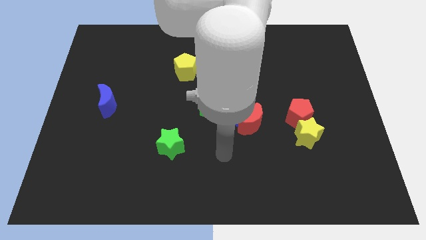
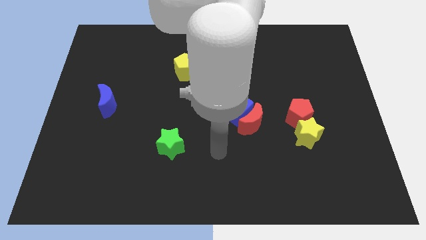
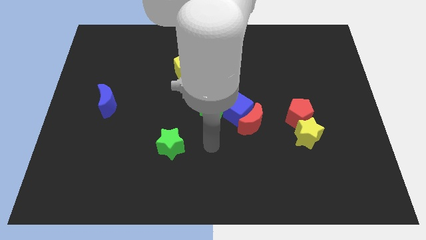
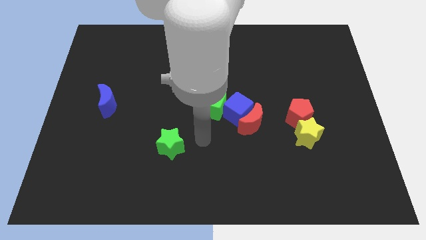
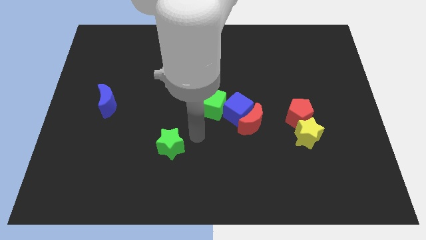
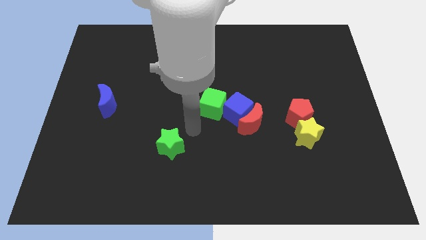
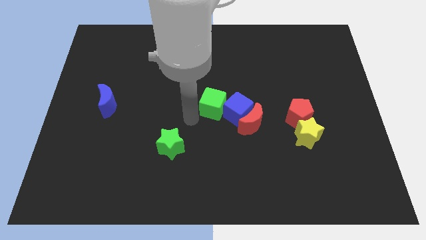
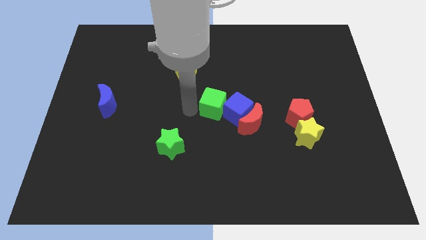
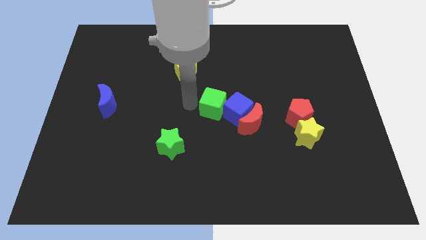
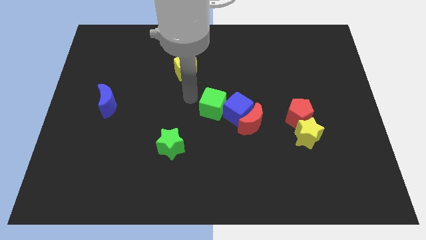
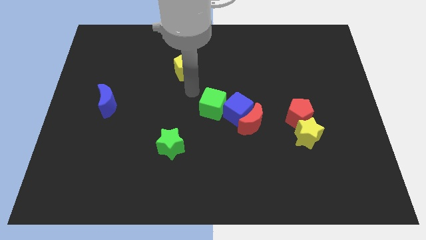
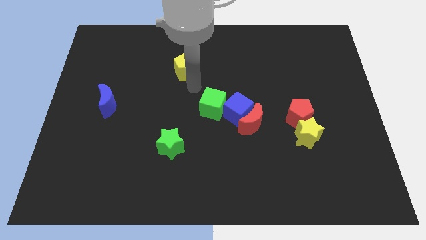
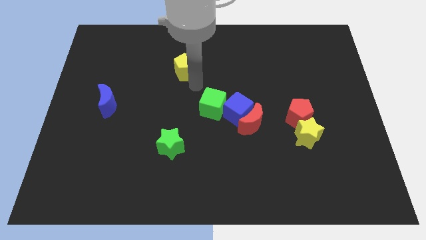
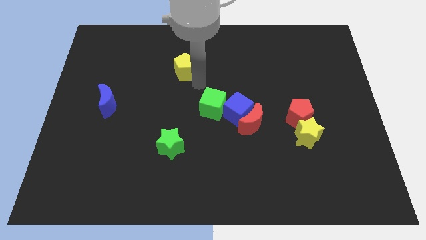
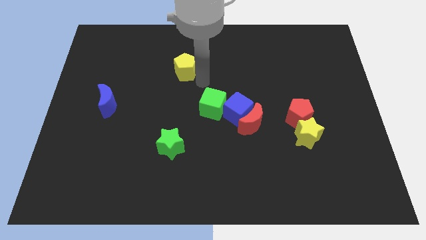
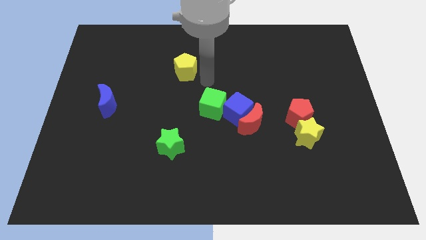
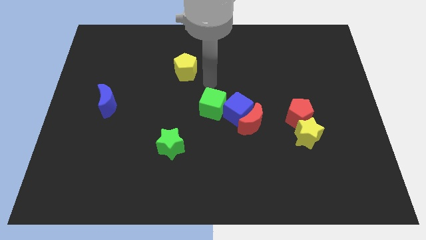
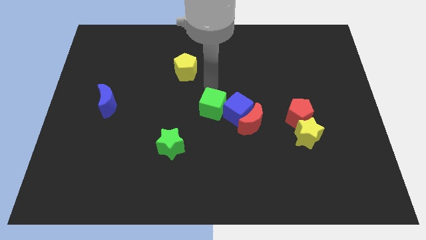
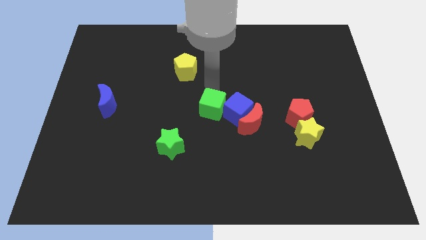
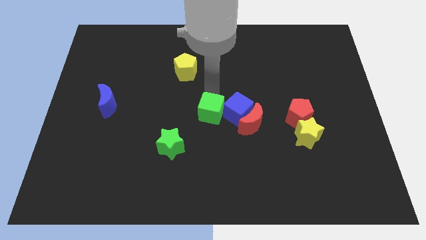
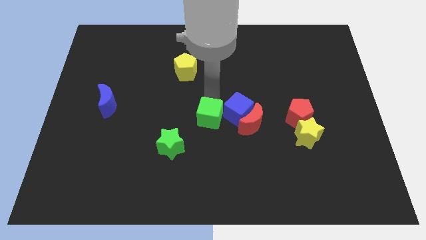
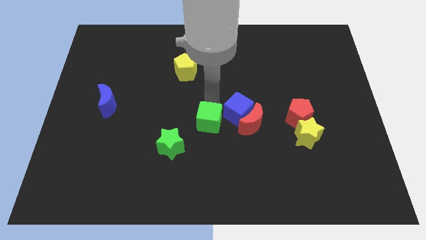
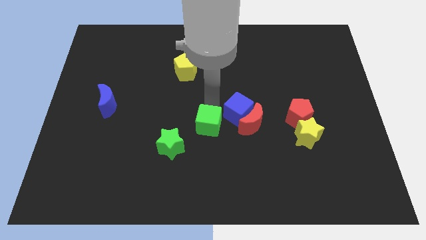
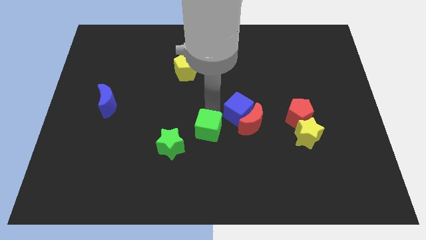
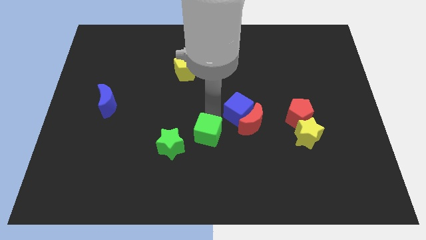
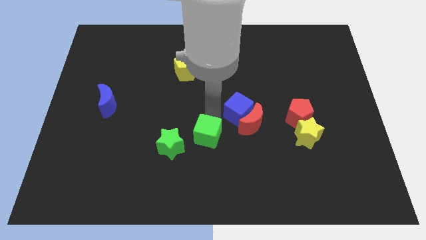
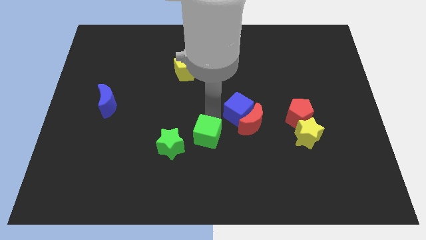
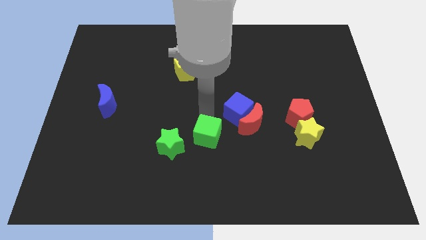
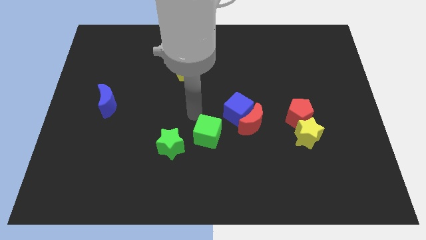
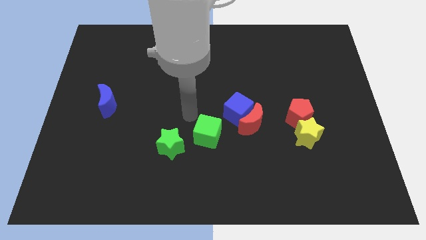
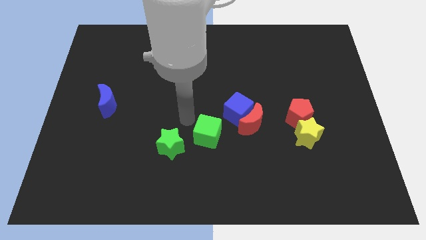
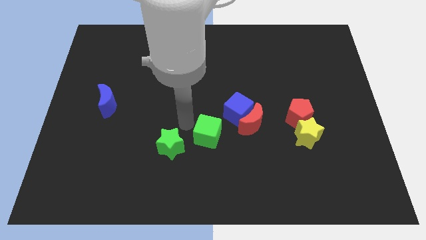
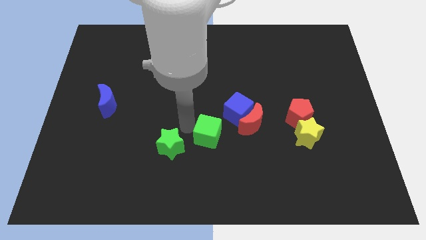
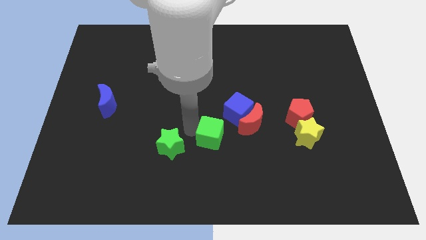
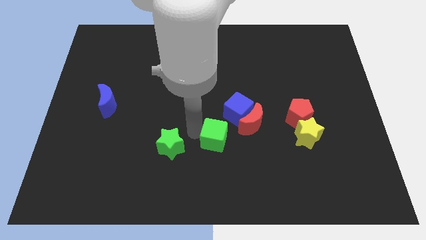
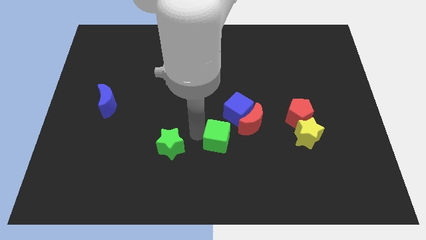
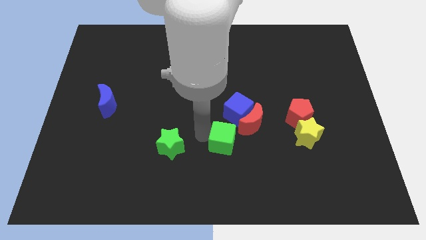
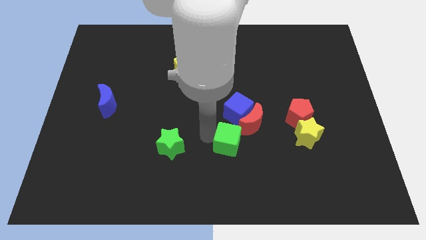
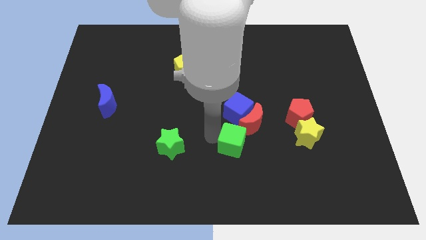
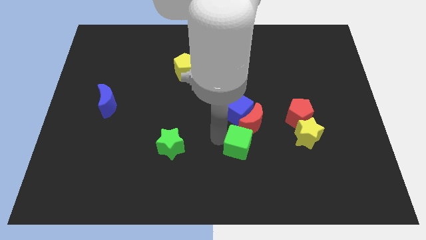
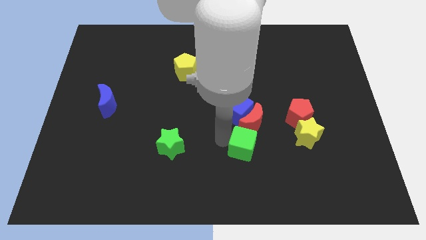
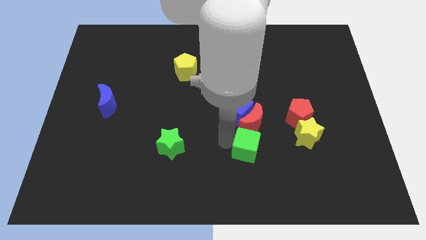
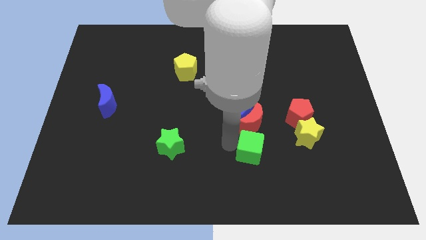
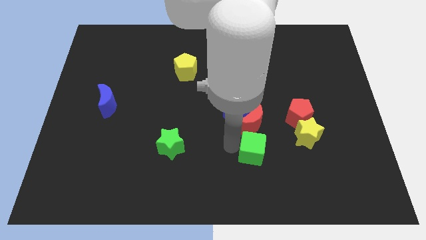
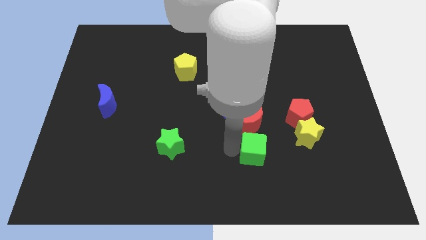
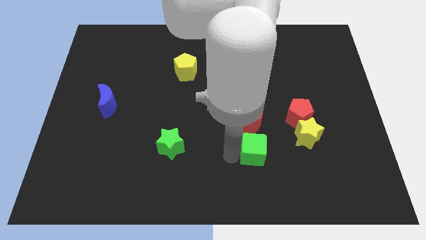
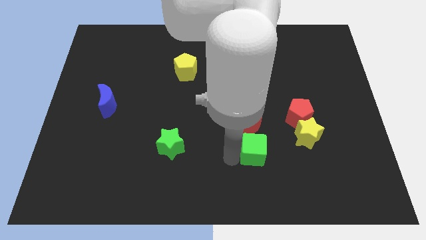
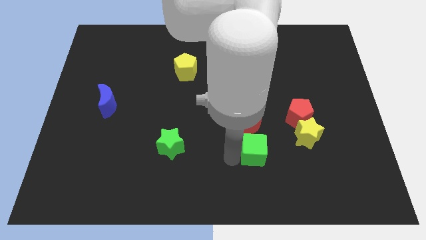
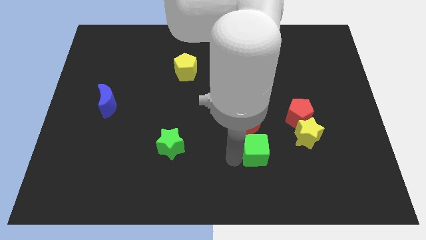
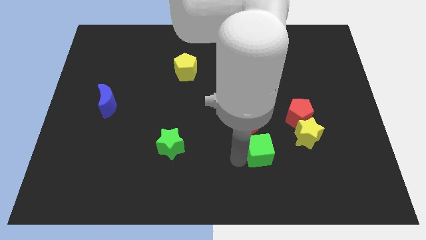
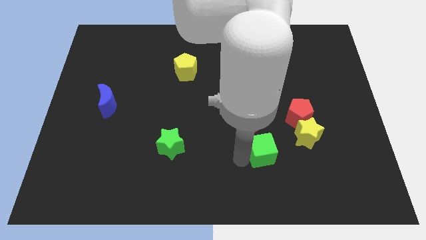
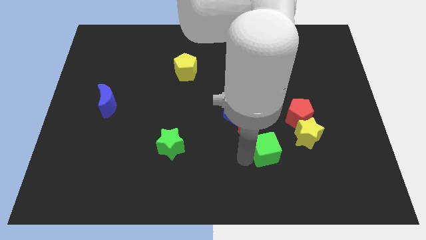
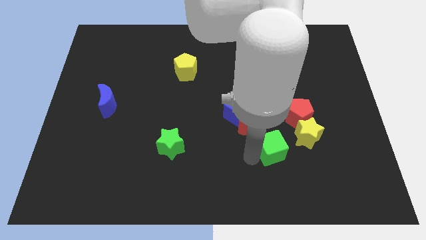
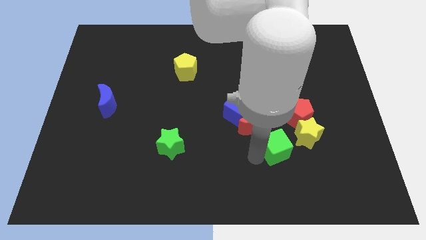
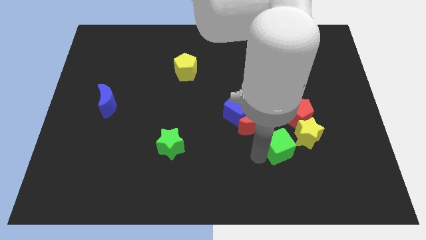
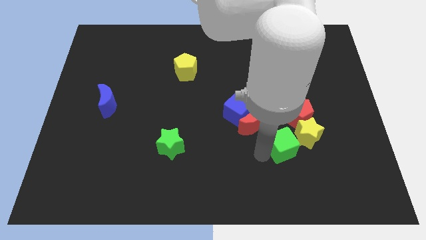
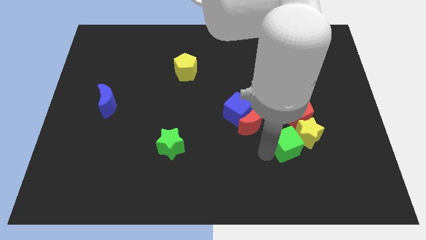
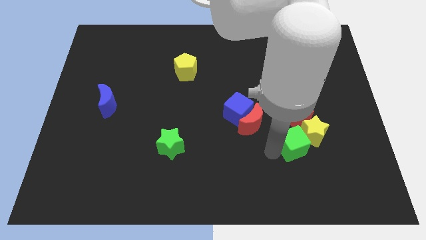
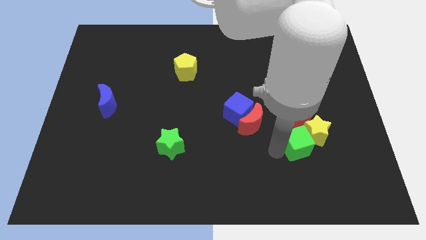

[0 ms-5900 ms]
push the green cube next to the yellow star

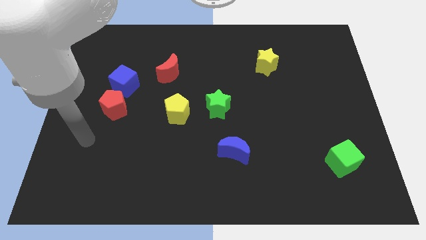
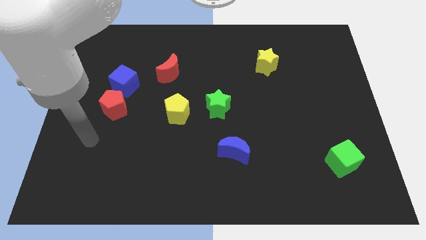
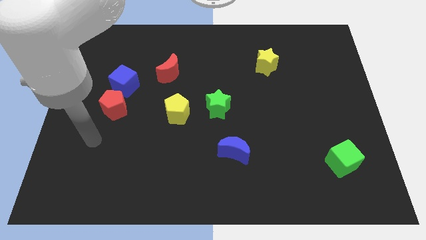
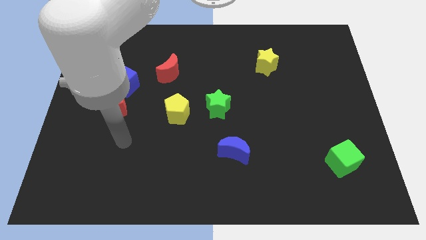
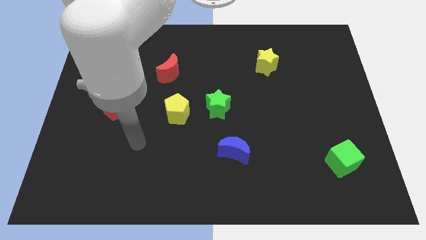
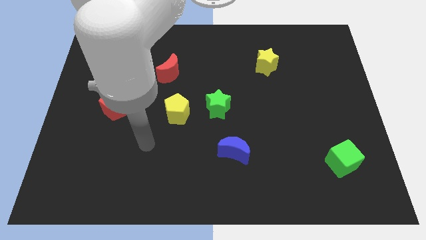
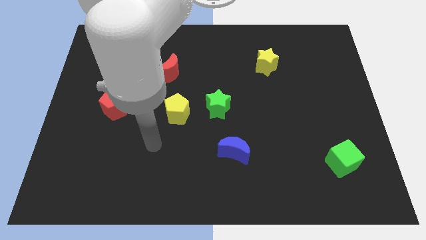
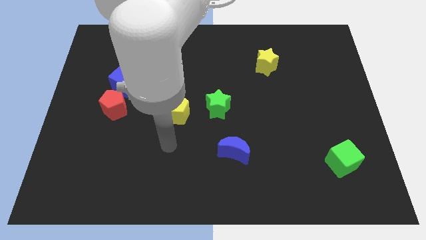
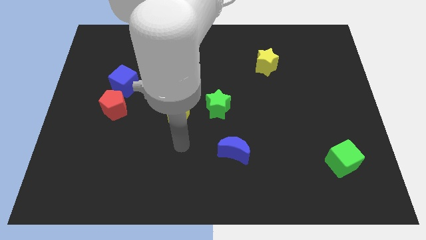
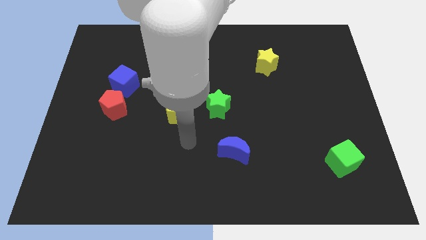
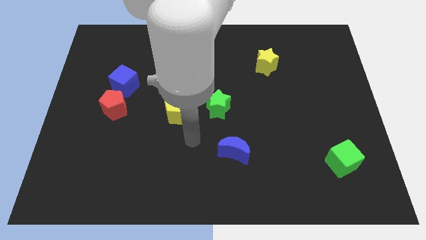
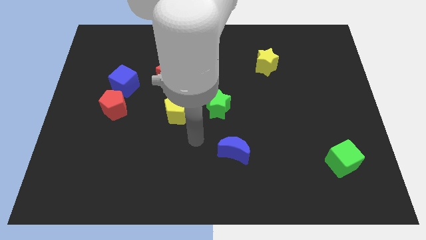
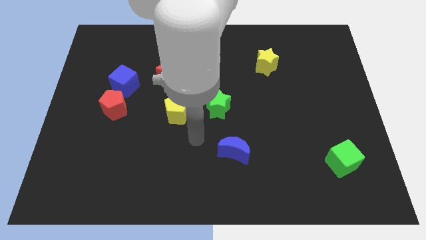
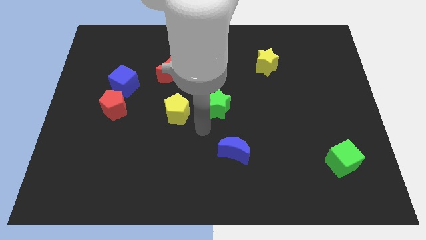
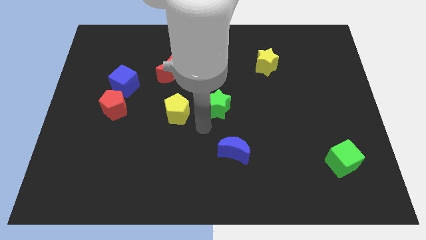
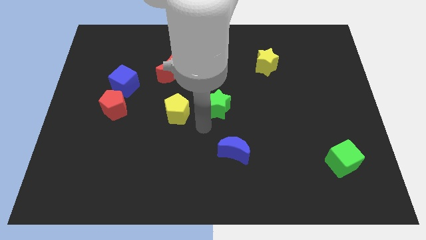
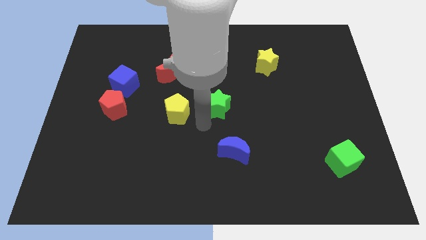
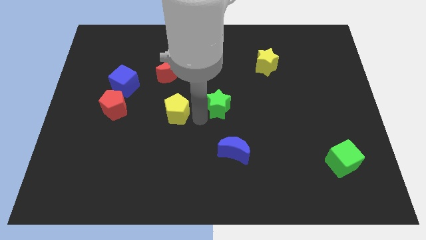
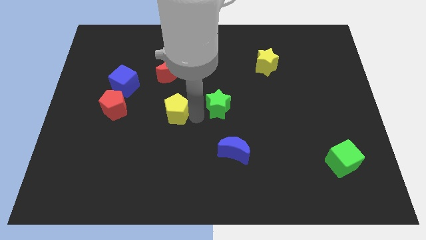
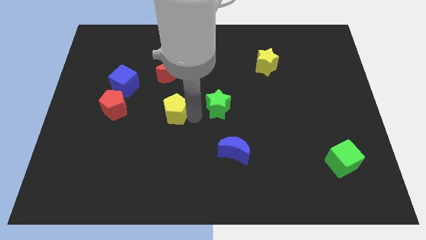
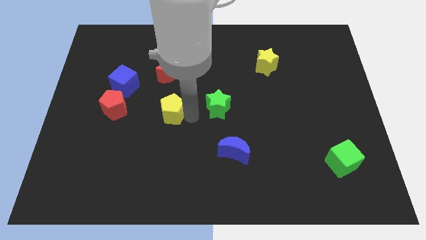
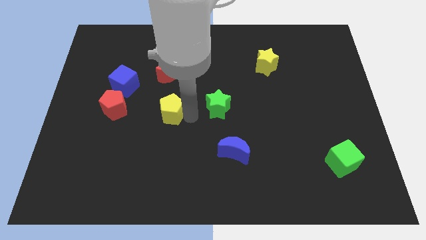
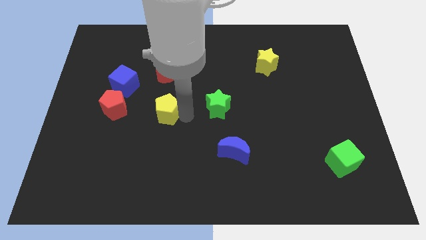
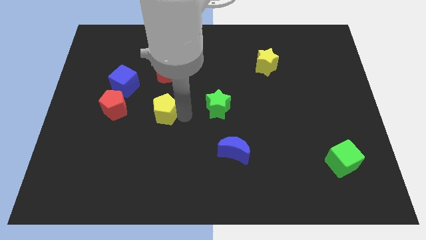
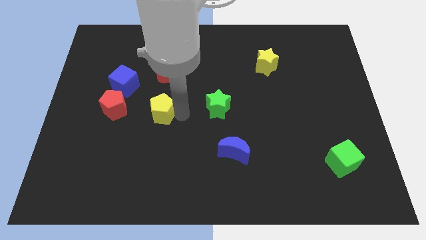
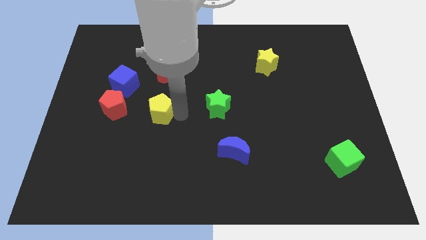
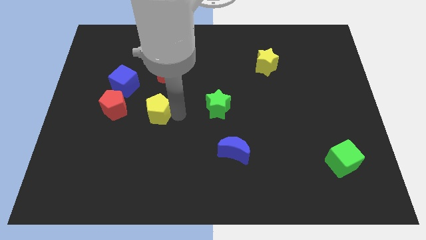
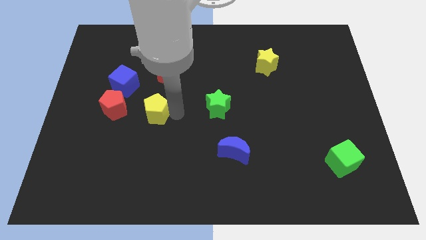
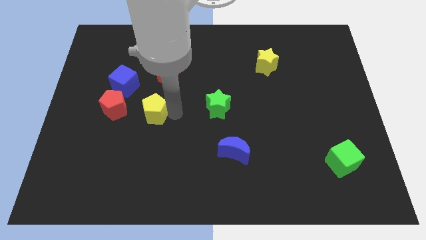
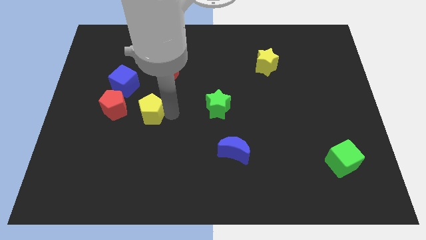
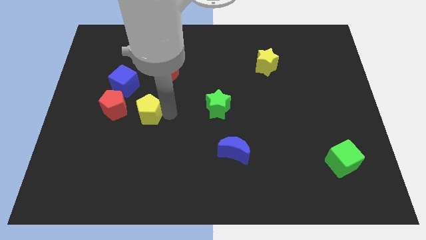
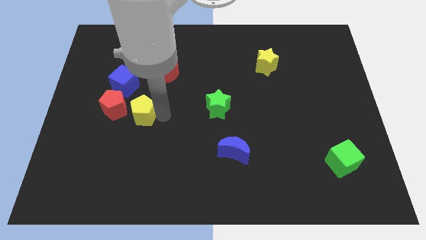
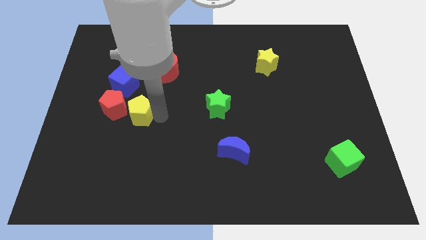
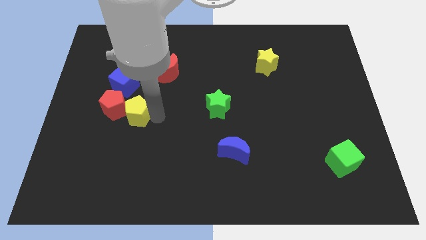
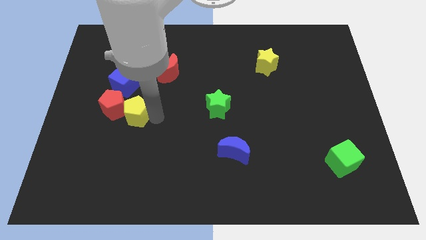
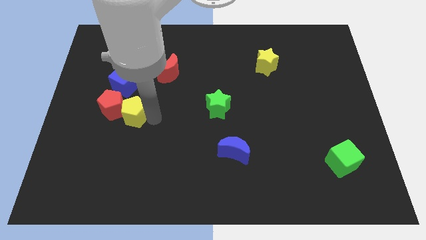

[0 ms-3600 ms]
put the yellow pentagon close to the red pentagon
